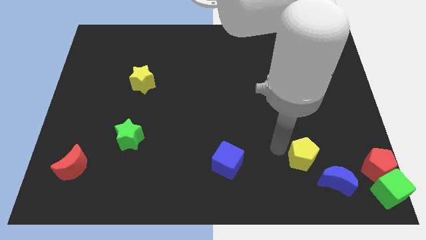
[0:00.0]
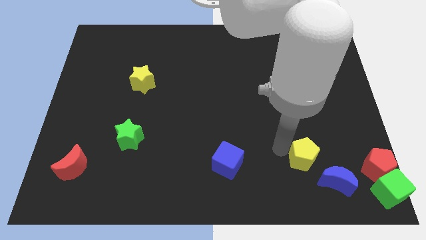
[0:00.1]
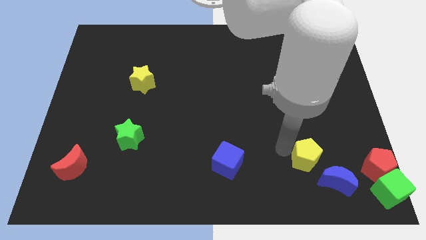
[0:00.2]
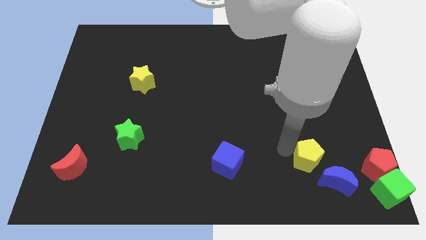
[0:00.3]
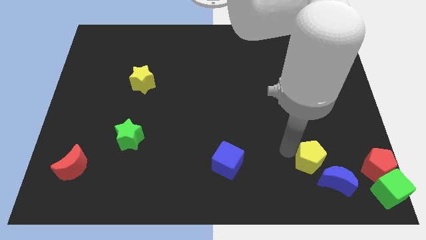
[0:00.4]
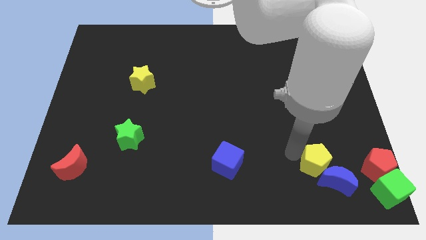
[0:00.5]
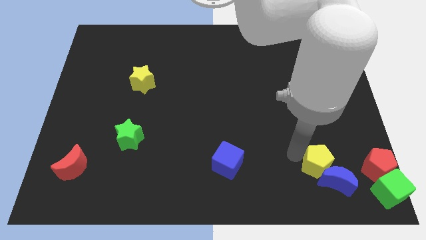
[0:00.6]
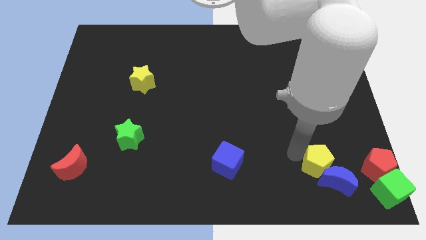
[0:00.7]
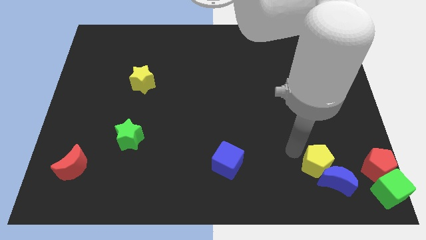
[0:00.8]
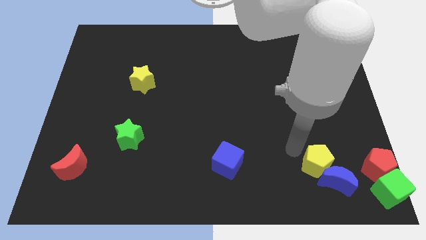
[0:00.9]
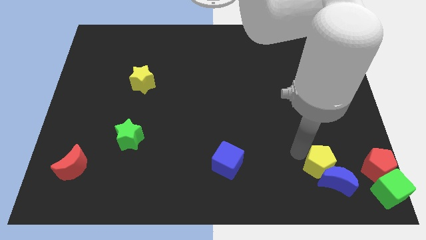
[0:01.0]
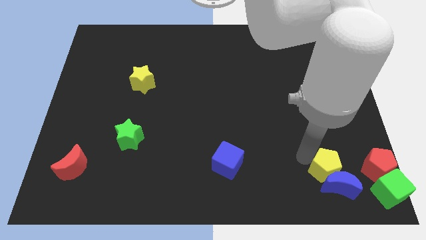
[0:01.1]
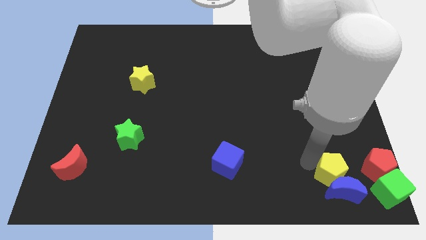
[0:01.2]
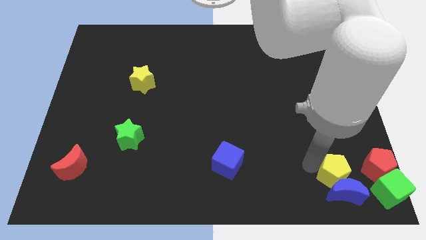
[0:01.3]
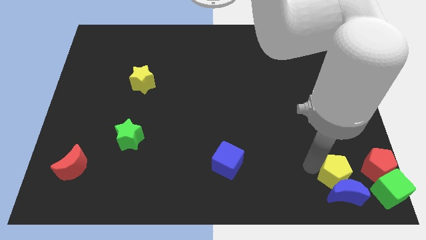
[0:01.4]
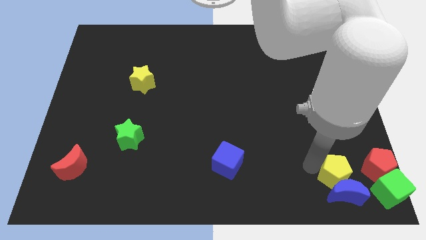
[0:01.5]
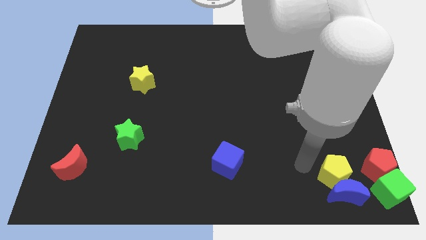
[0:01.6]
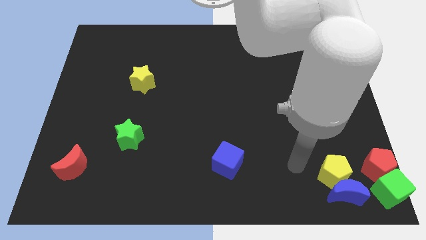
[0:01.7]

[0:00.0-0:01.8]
move yellow pentagon above the blue moon

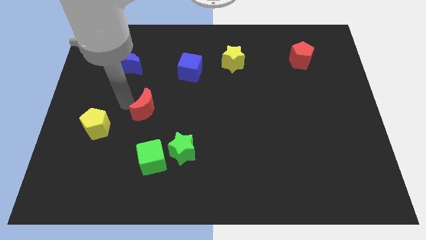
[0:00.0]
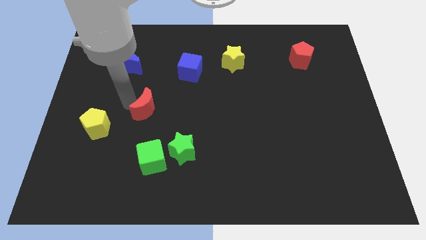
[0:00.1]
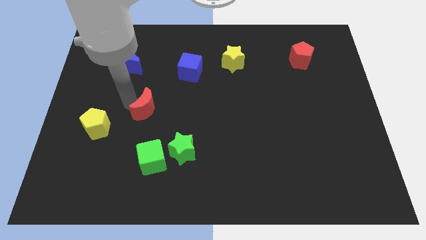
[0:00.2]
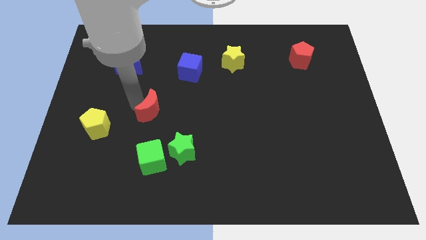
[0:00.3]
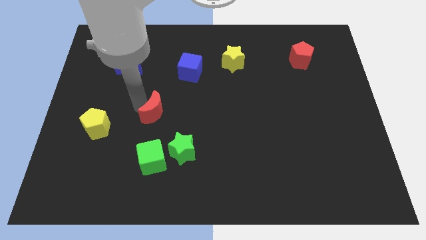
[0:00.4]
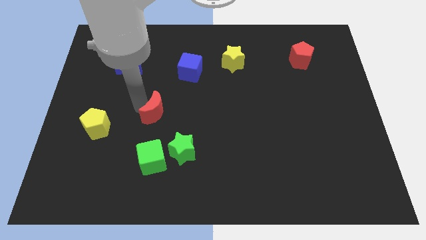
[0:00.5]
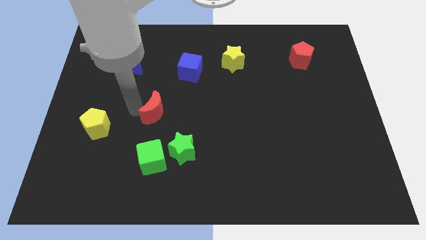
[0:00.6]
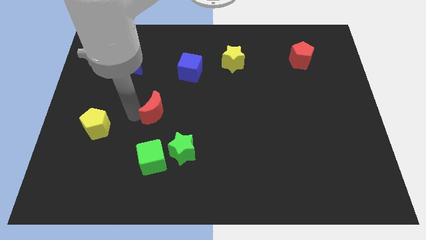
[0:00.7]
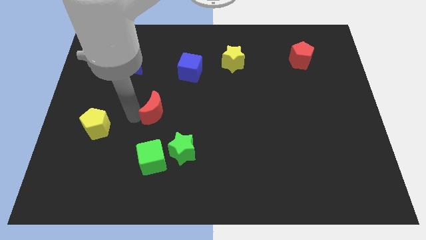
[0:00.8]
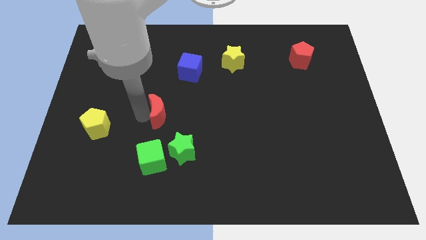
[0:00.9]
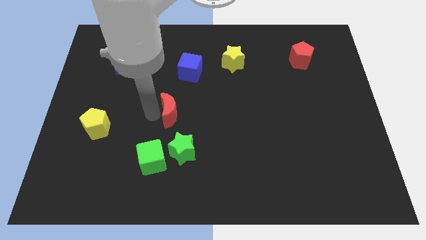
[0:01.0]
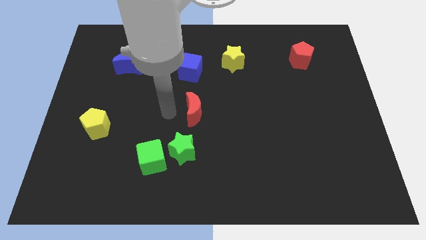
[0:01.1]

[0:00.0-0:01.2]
place the red crescent above the green star

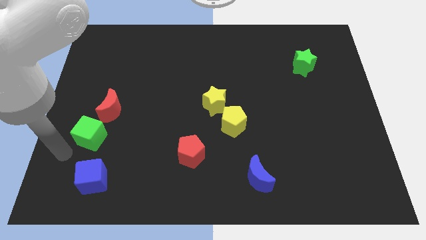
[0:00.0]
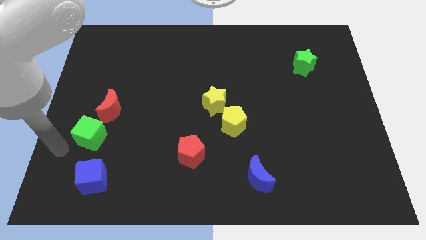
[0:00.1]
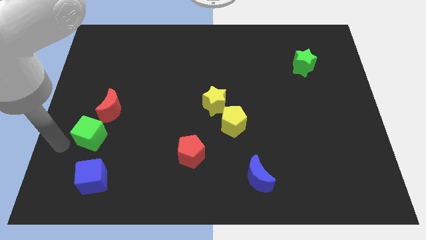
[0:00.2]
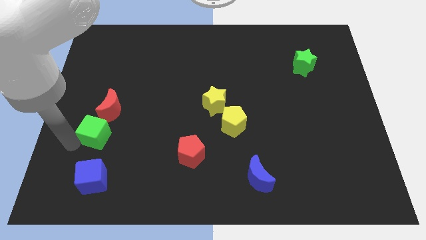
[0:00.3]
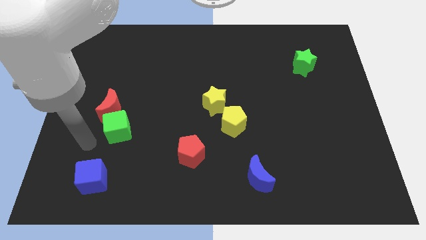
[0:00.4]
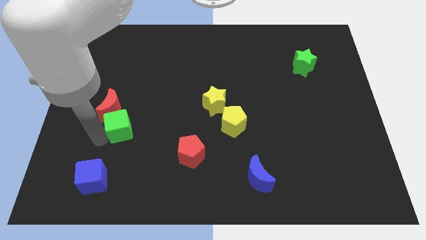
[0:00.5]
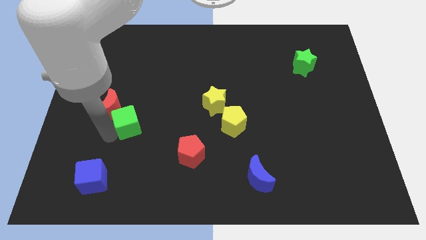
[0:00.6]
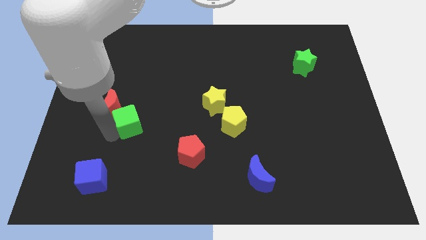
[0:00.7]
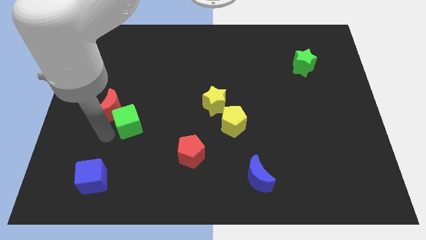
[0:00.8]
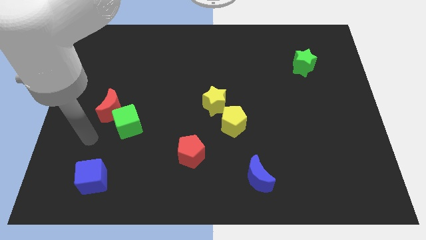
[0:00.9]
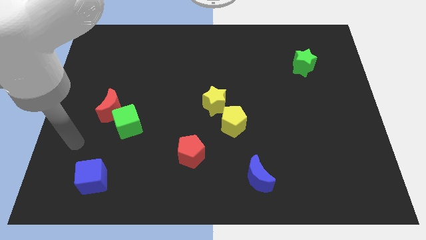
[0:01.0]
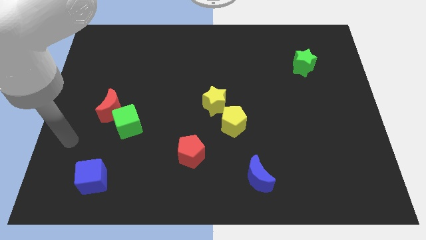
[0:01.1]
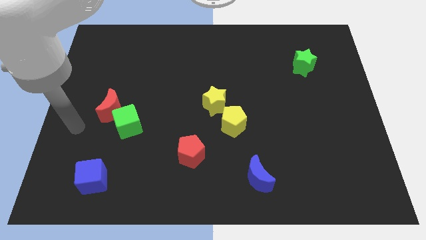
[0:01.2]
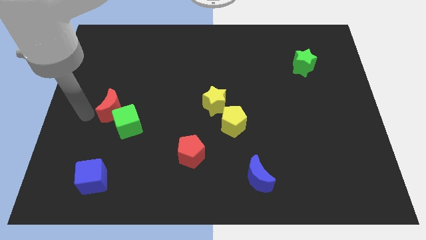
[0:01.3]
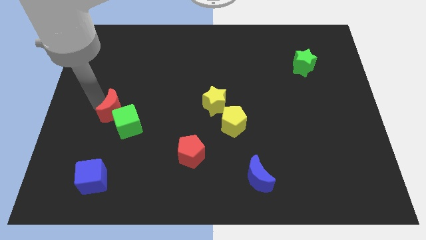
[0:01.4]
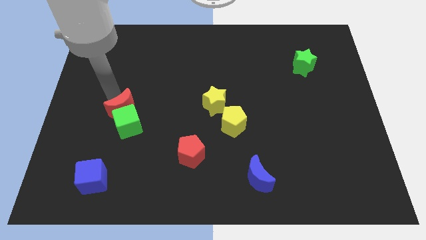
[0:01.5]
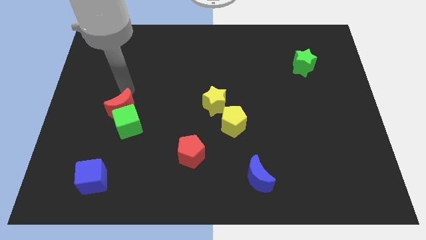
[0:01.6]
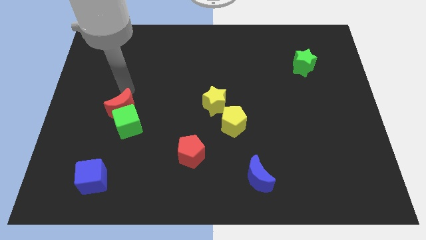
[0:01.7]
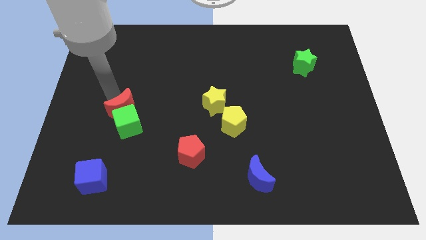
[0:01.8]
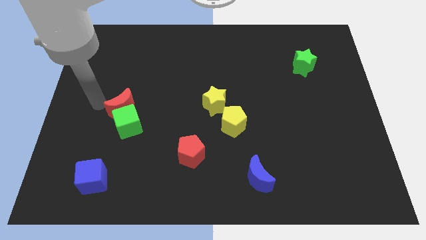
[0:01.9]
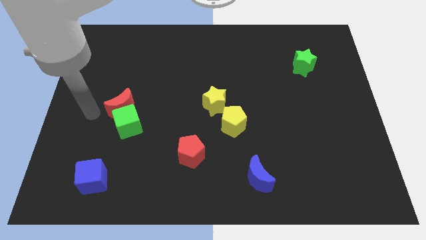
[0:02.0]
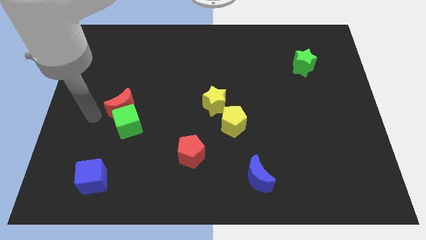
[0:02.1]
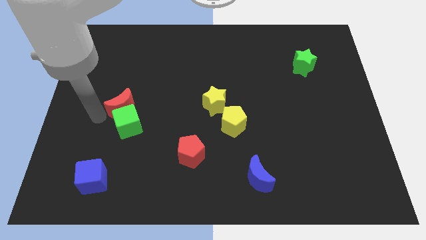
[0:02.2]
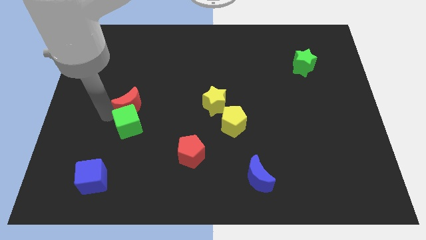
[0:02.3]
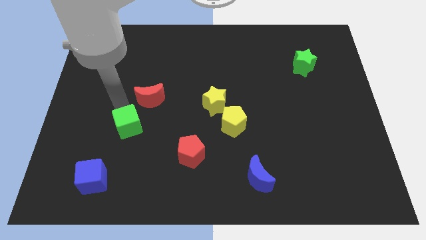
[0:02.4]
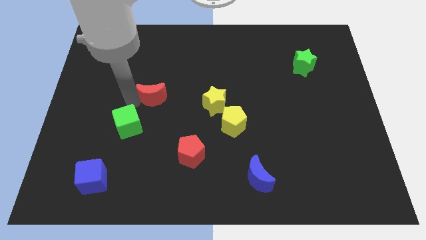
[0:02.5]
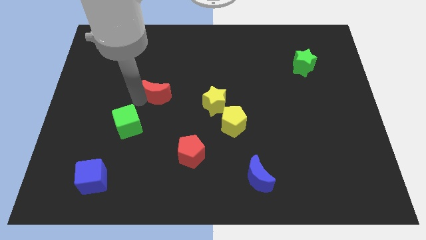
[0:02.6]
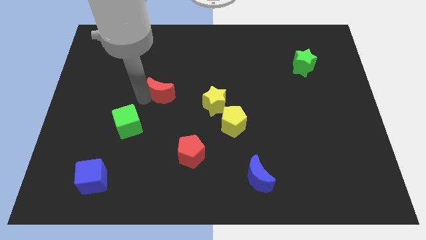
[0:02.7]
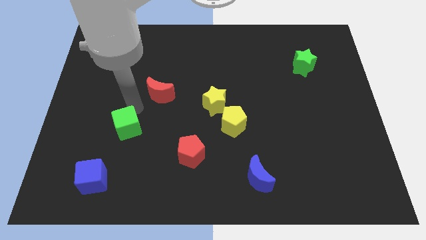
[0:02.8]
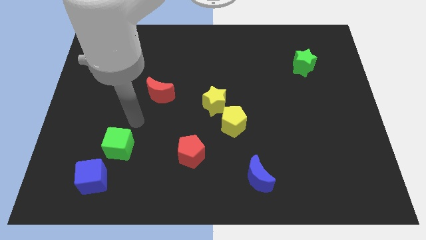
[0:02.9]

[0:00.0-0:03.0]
move the red crescent away from the green cube

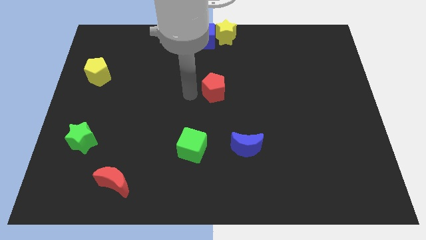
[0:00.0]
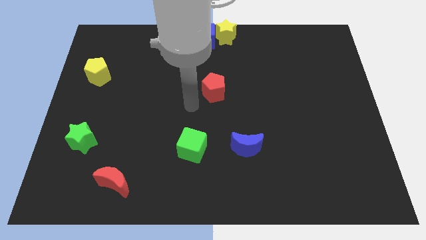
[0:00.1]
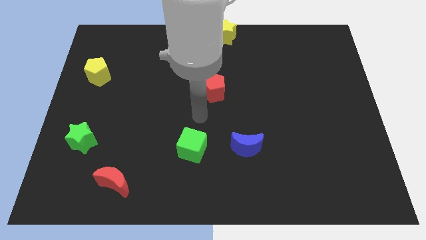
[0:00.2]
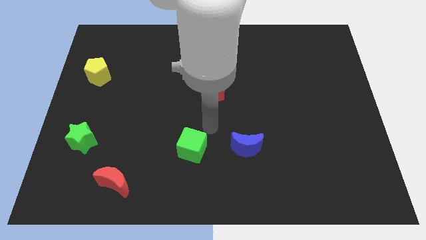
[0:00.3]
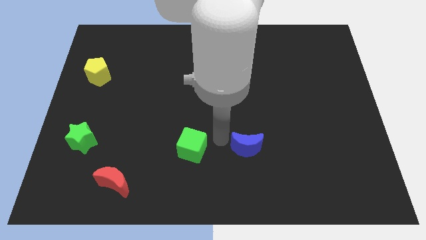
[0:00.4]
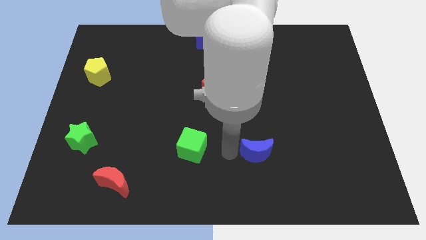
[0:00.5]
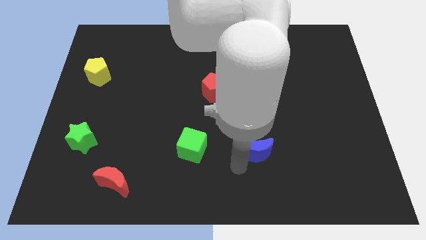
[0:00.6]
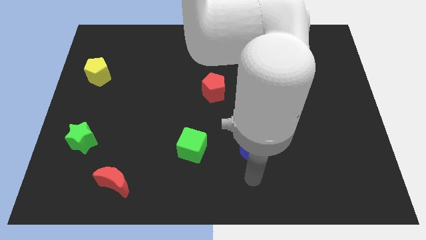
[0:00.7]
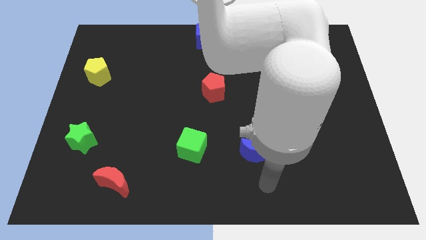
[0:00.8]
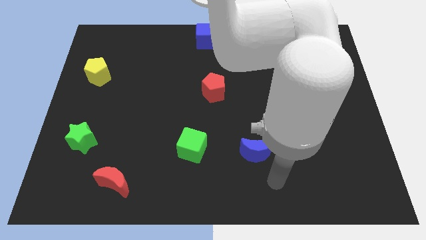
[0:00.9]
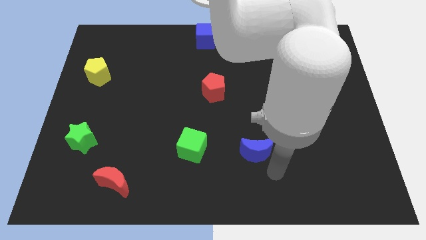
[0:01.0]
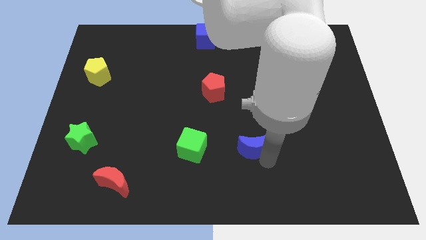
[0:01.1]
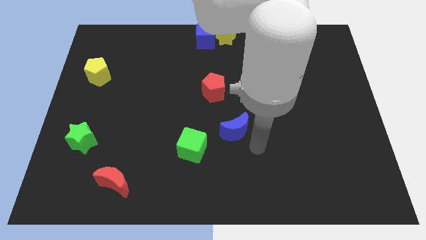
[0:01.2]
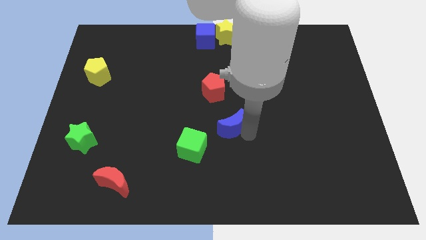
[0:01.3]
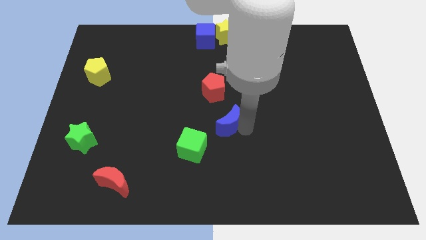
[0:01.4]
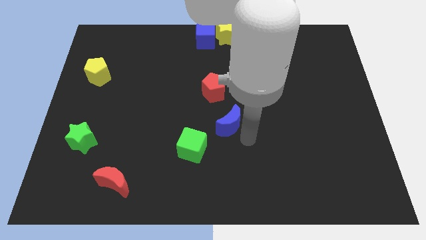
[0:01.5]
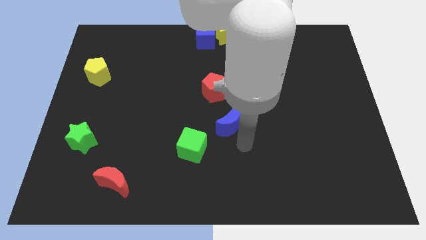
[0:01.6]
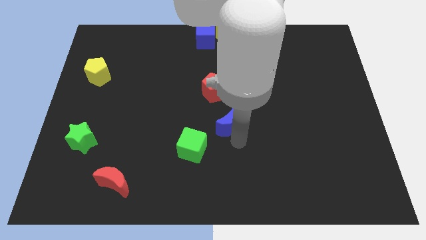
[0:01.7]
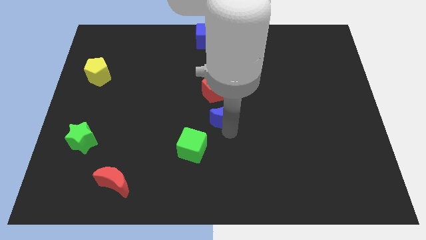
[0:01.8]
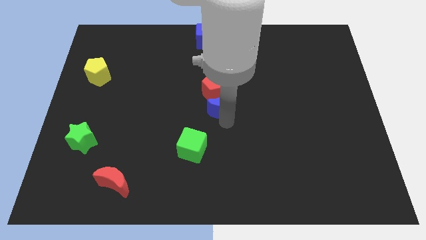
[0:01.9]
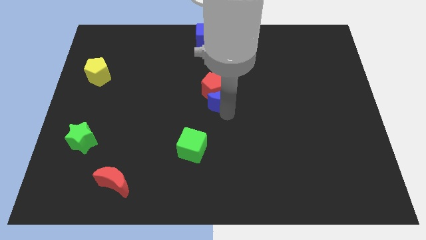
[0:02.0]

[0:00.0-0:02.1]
push the blue moon into the red pentagon

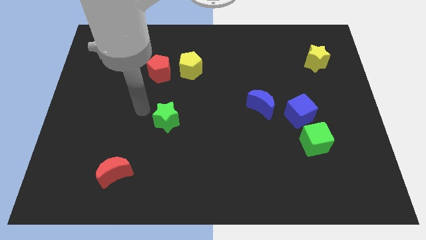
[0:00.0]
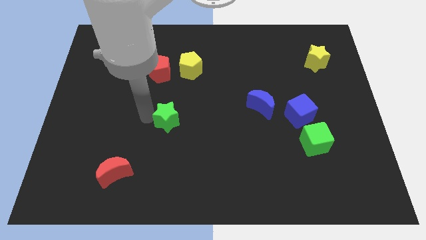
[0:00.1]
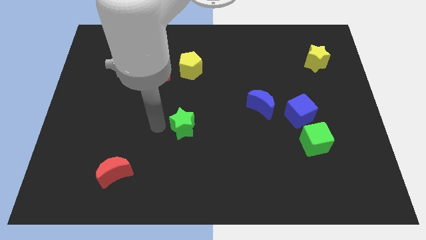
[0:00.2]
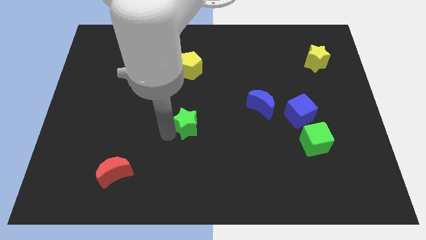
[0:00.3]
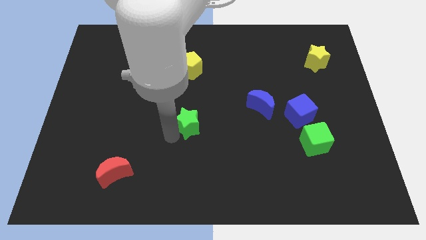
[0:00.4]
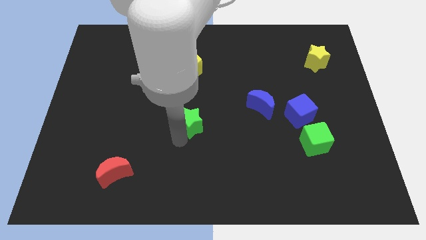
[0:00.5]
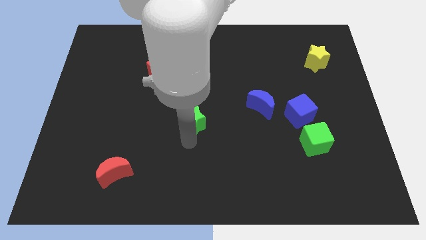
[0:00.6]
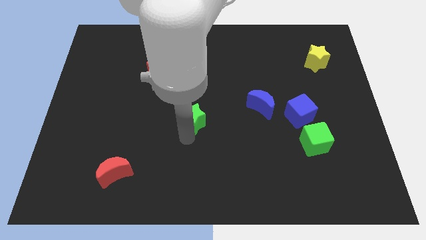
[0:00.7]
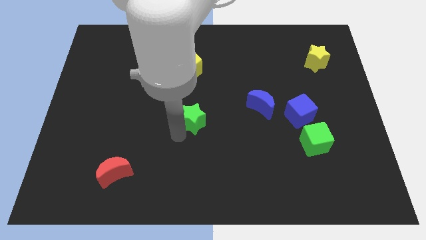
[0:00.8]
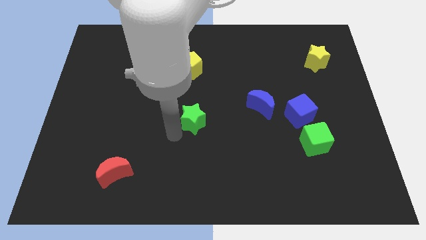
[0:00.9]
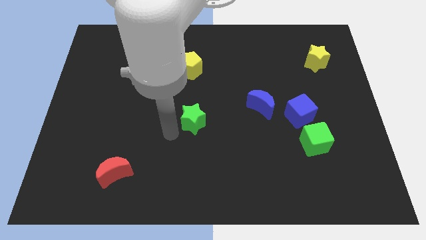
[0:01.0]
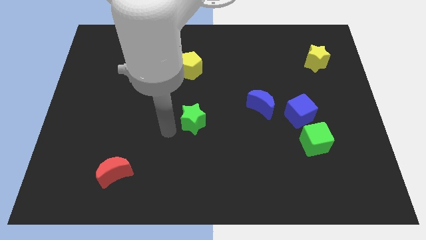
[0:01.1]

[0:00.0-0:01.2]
move the green star to the center of the board
